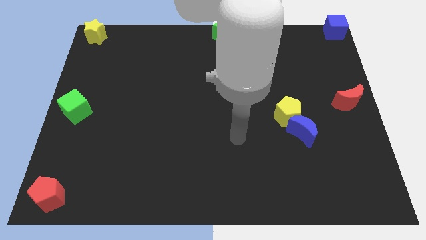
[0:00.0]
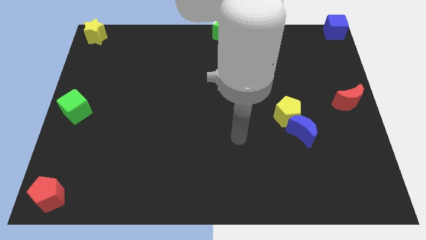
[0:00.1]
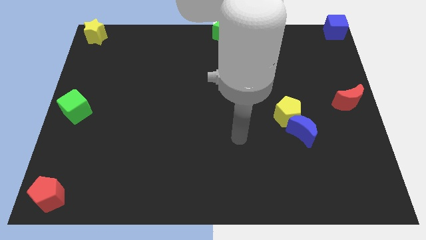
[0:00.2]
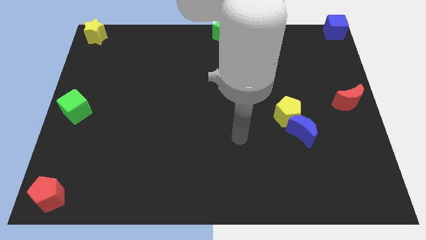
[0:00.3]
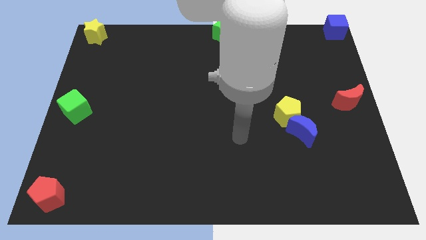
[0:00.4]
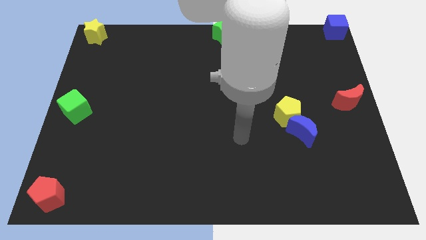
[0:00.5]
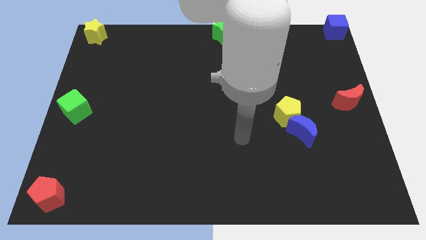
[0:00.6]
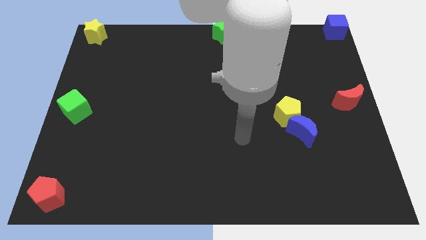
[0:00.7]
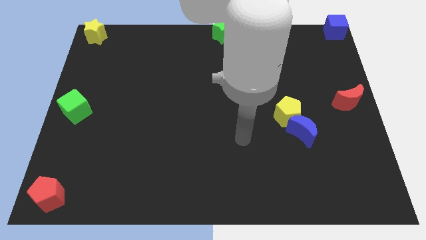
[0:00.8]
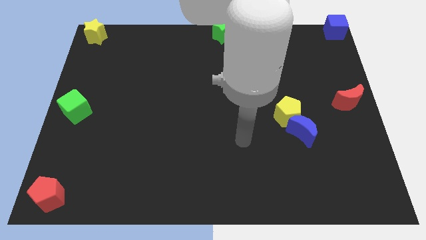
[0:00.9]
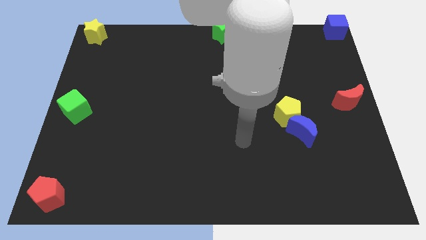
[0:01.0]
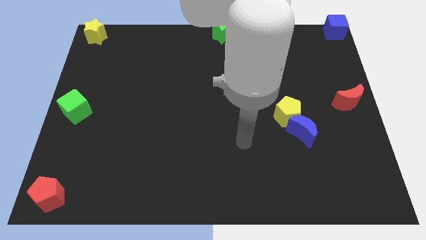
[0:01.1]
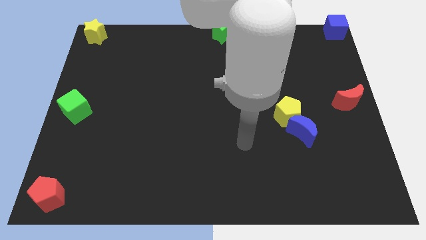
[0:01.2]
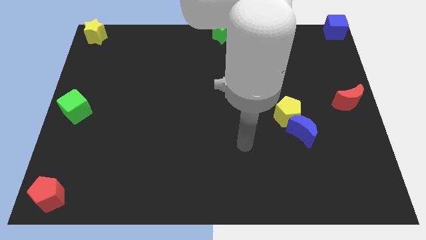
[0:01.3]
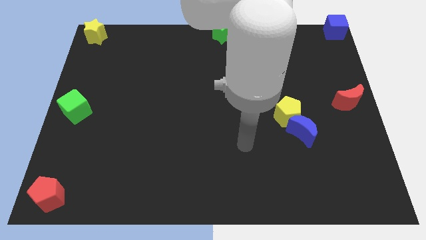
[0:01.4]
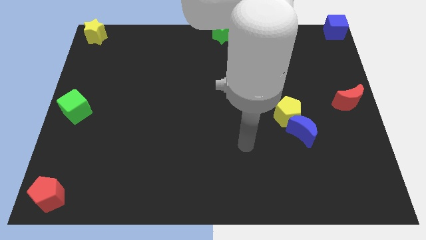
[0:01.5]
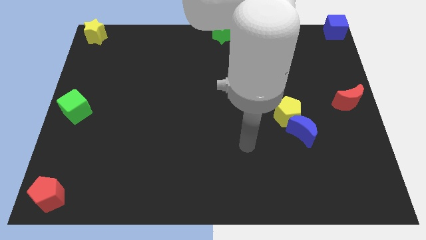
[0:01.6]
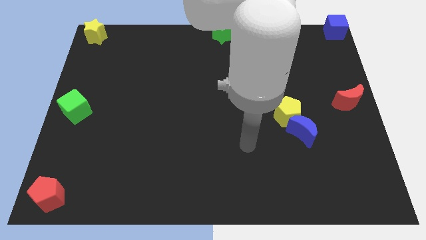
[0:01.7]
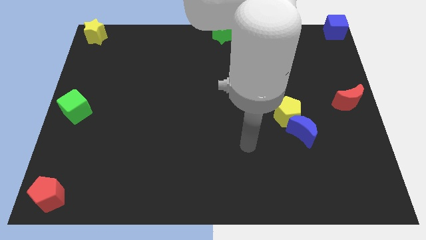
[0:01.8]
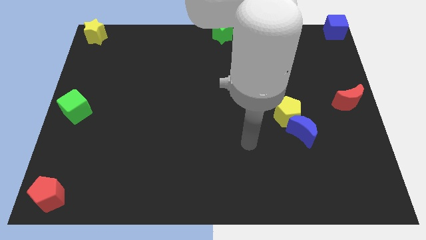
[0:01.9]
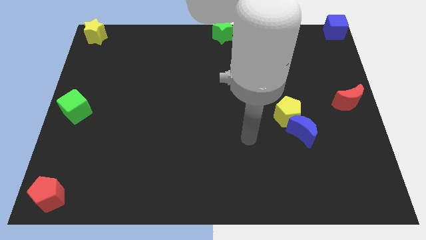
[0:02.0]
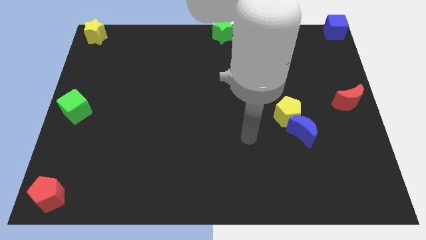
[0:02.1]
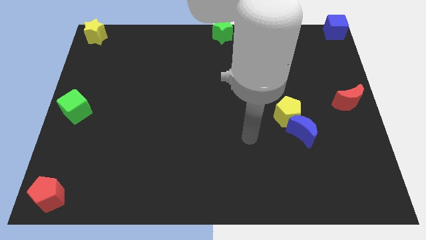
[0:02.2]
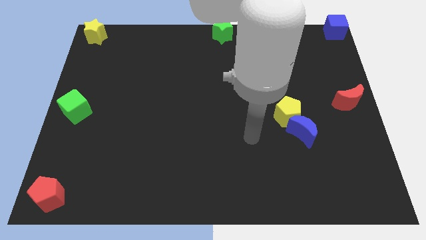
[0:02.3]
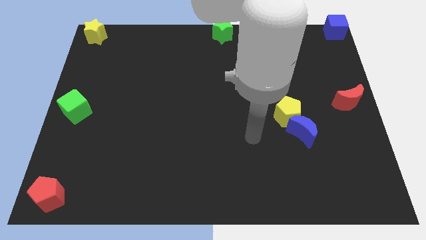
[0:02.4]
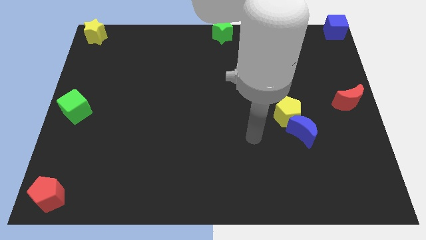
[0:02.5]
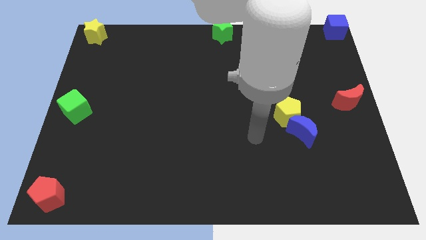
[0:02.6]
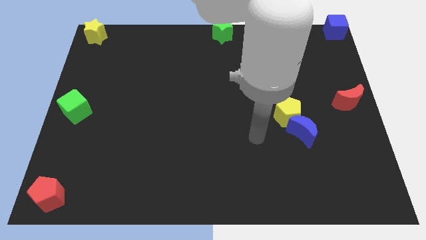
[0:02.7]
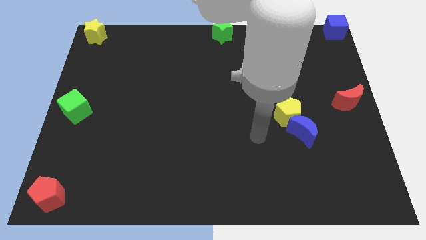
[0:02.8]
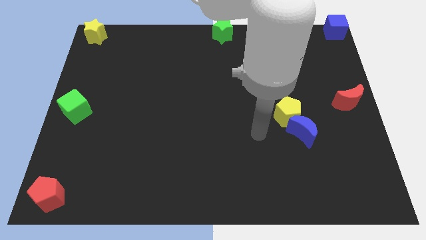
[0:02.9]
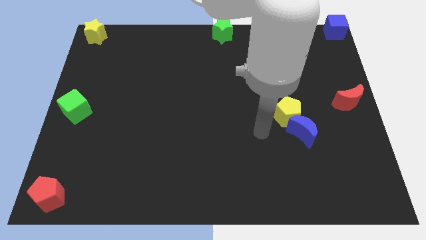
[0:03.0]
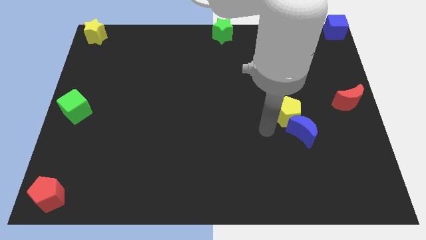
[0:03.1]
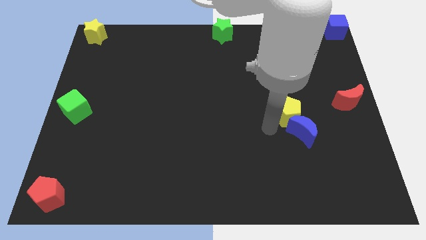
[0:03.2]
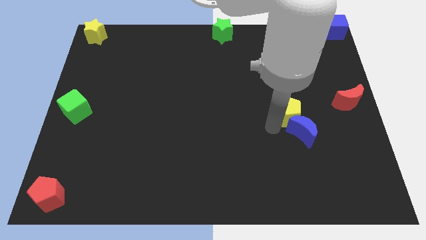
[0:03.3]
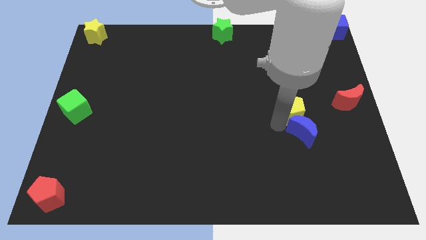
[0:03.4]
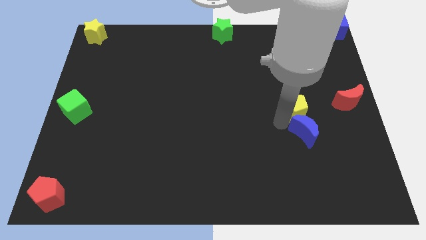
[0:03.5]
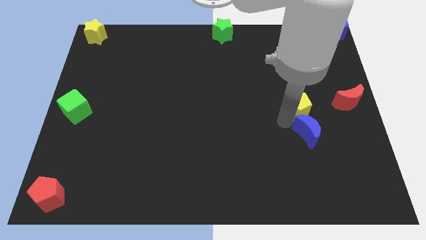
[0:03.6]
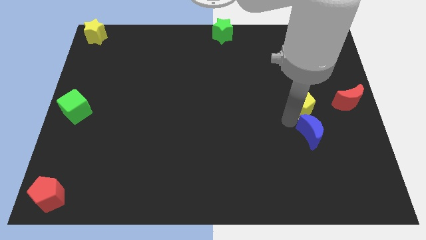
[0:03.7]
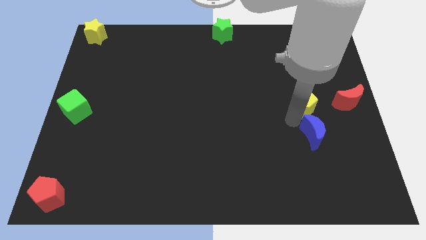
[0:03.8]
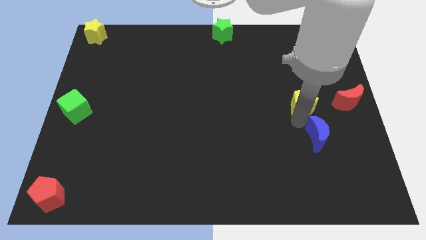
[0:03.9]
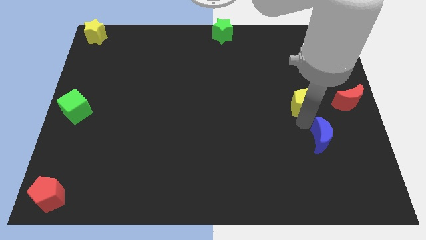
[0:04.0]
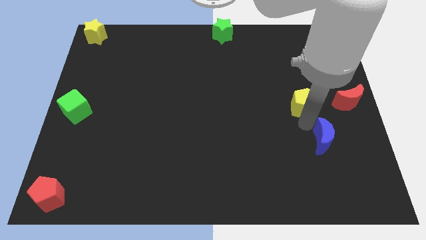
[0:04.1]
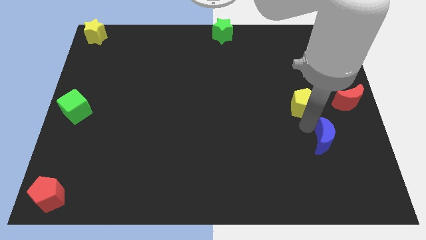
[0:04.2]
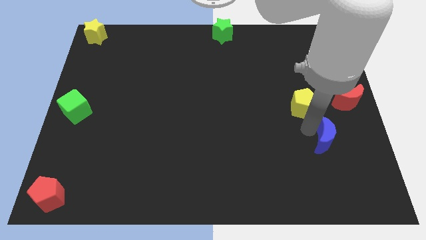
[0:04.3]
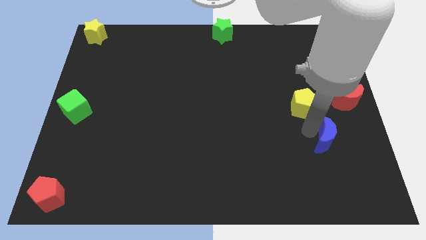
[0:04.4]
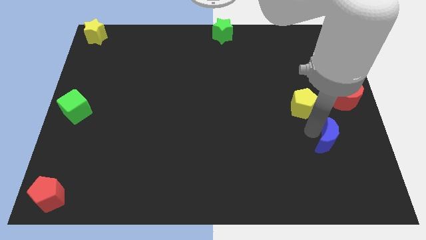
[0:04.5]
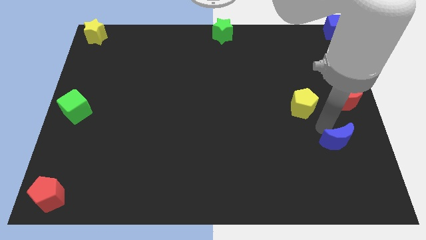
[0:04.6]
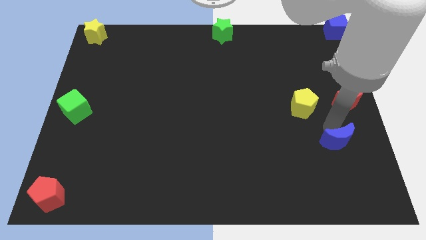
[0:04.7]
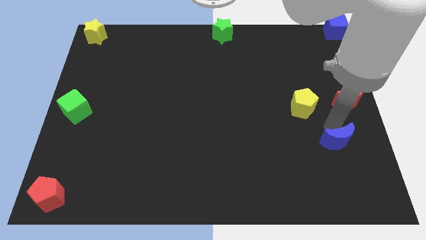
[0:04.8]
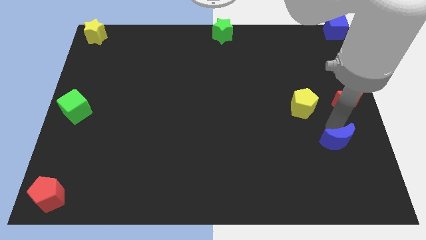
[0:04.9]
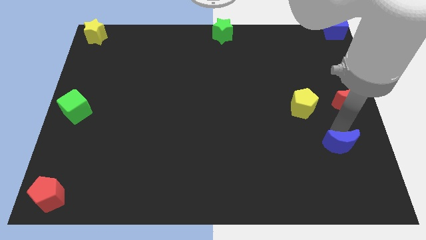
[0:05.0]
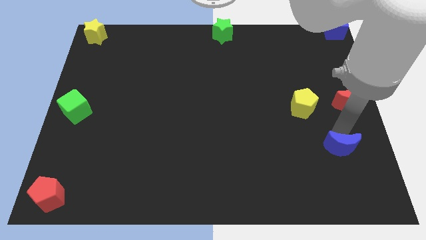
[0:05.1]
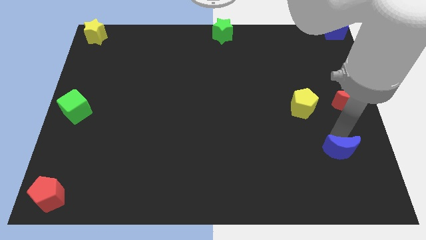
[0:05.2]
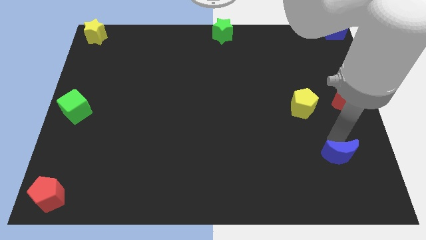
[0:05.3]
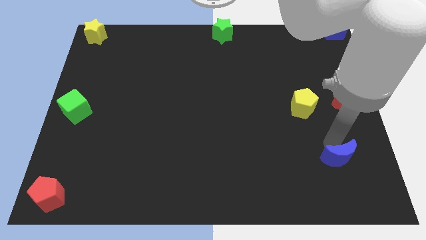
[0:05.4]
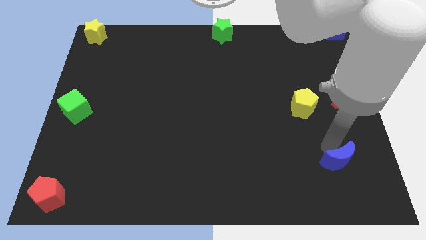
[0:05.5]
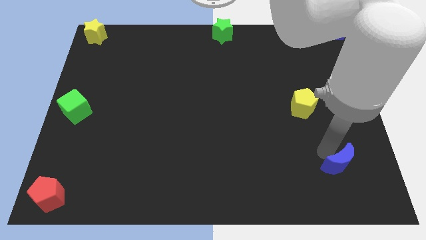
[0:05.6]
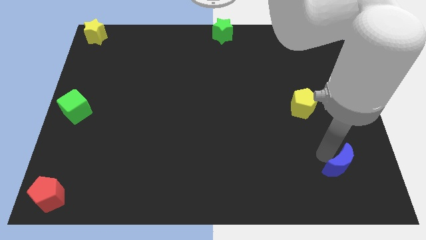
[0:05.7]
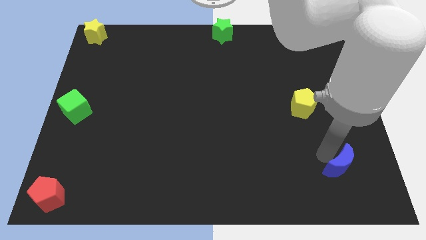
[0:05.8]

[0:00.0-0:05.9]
separate the blue moon from the yellow pentagon

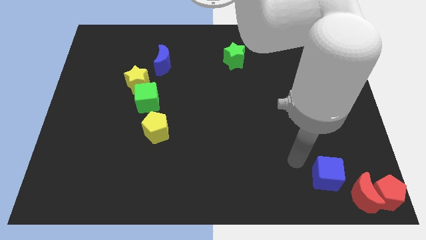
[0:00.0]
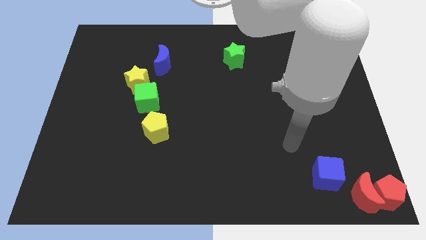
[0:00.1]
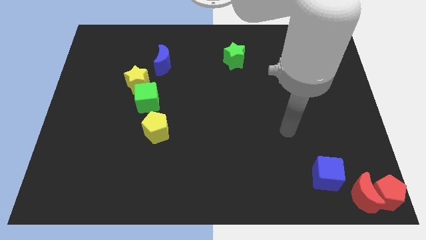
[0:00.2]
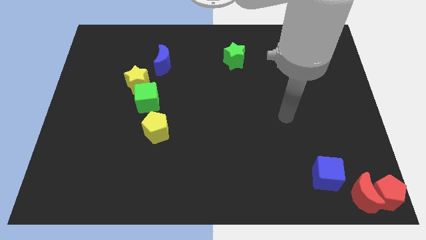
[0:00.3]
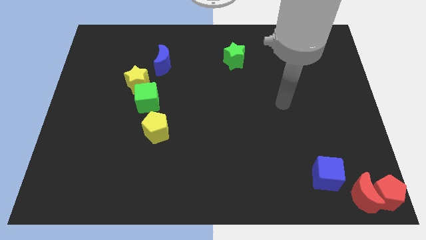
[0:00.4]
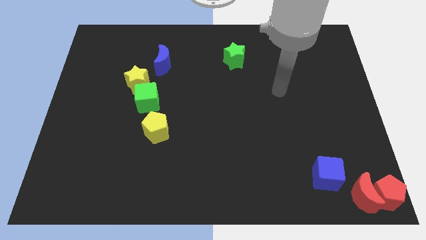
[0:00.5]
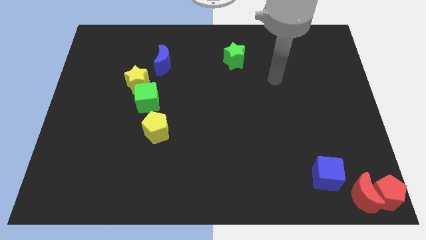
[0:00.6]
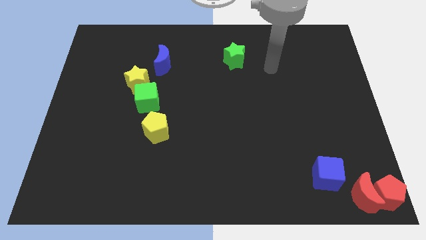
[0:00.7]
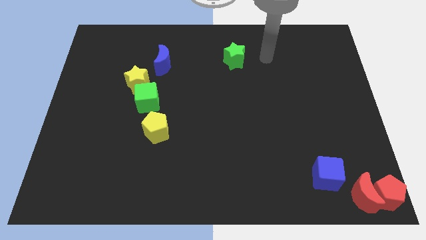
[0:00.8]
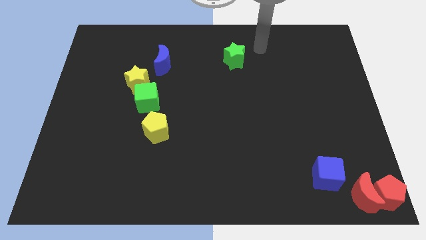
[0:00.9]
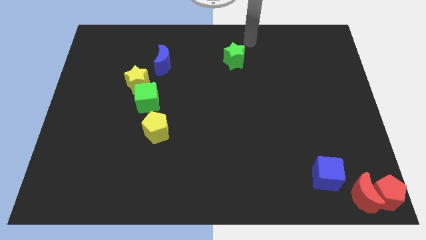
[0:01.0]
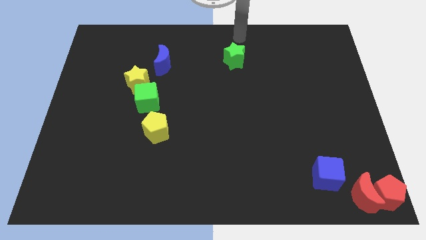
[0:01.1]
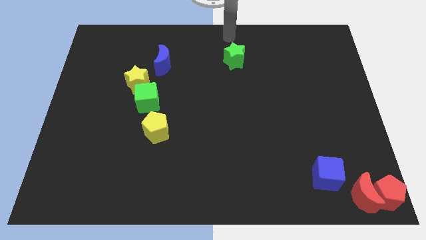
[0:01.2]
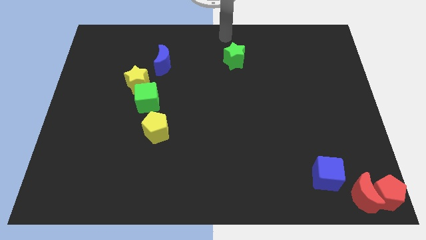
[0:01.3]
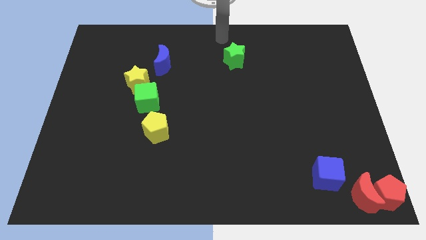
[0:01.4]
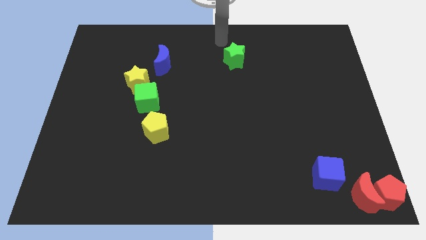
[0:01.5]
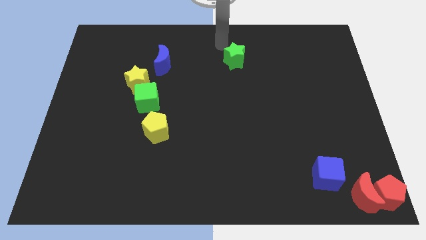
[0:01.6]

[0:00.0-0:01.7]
drag your arm to the top of green star

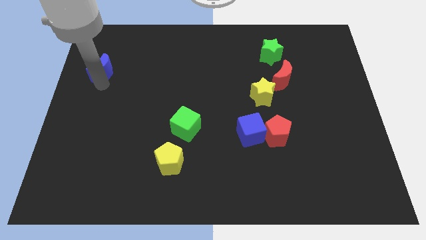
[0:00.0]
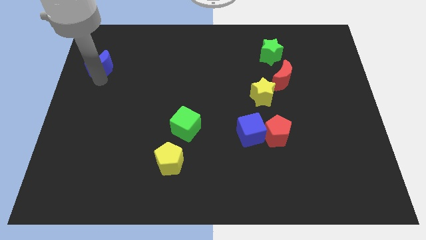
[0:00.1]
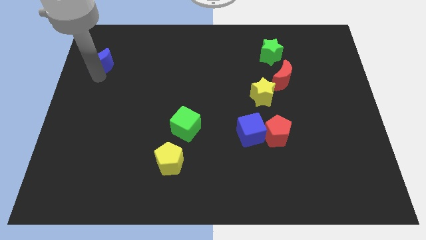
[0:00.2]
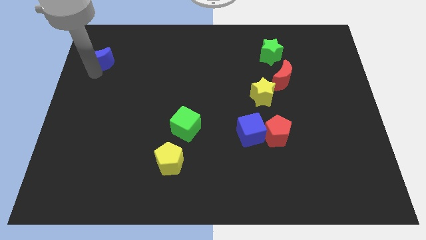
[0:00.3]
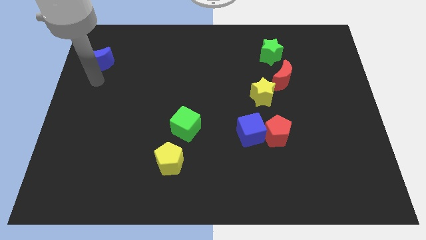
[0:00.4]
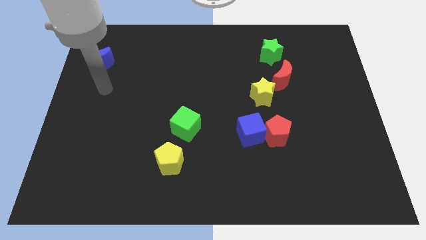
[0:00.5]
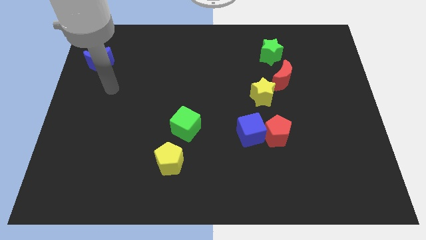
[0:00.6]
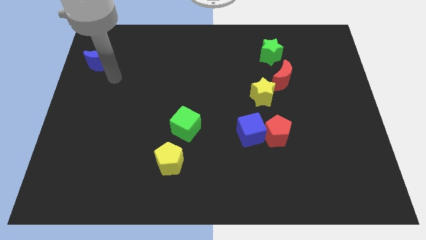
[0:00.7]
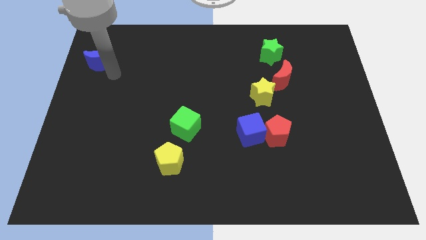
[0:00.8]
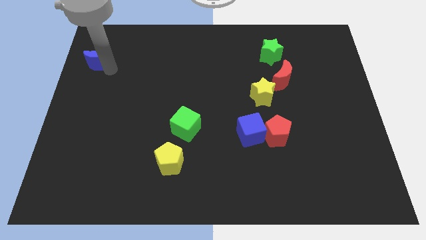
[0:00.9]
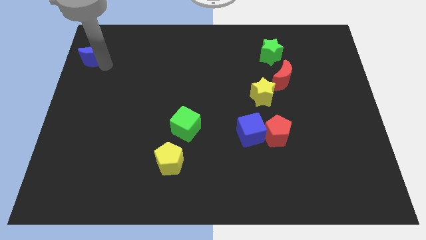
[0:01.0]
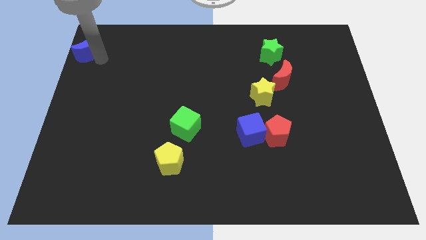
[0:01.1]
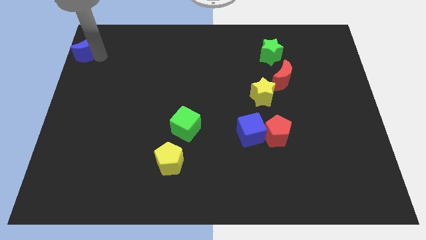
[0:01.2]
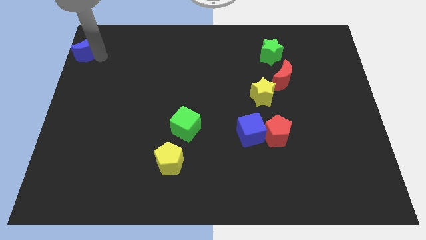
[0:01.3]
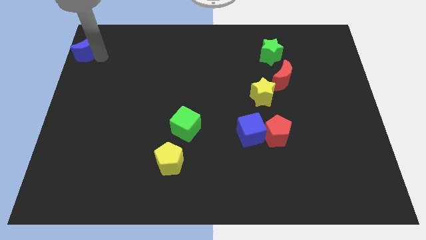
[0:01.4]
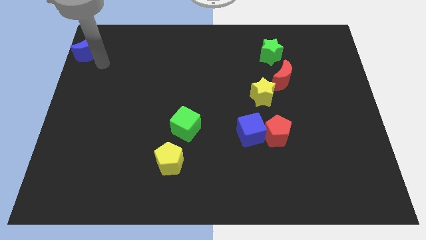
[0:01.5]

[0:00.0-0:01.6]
push blue moon to the top left center of the board
